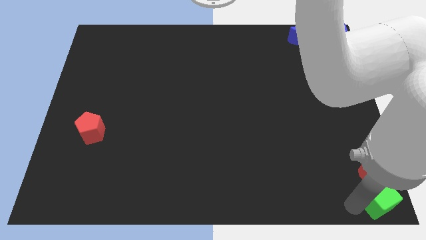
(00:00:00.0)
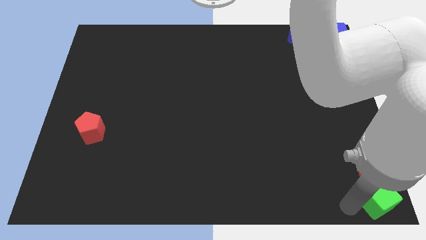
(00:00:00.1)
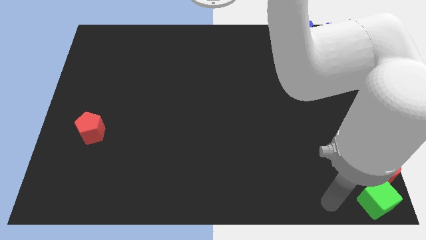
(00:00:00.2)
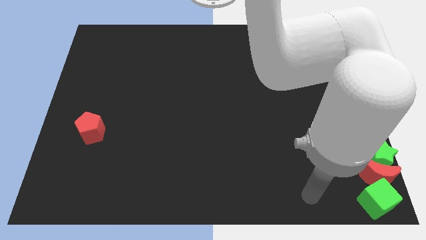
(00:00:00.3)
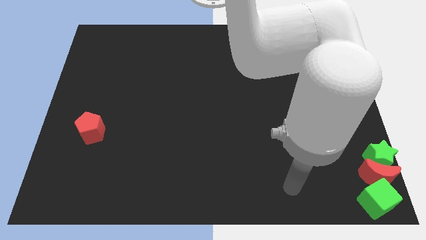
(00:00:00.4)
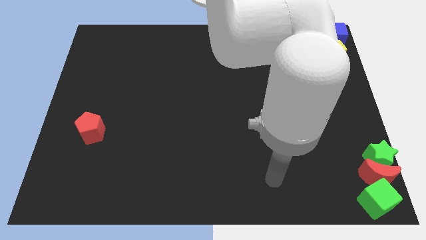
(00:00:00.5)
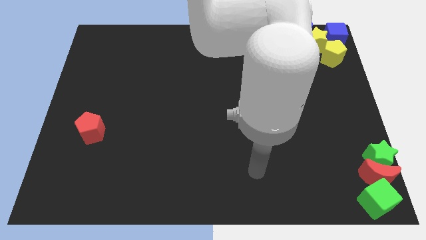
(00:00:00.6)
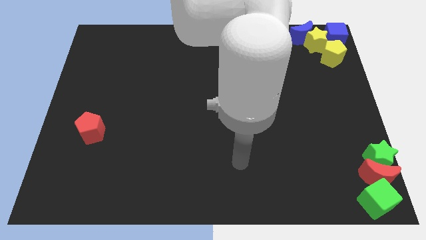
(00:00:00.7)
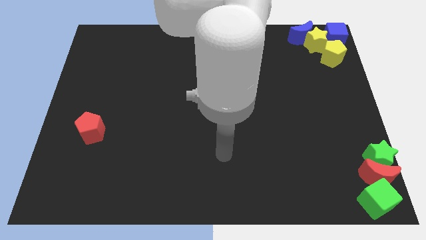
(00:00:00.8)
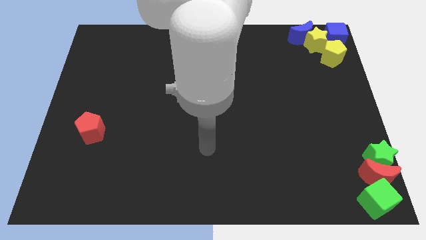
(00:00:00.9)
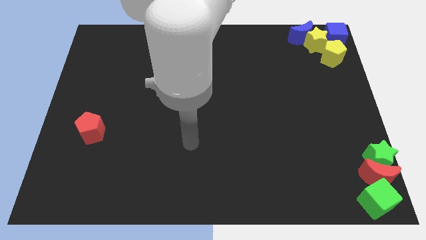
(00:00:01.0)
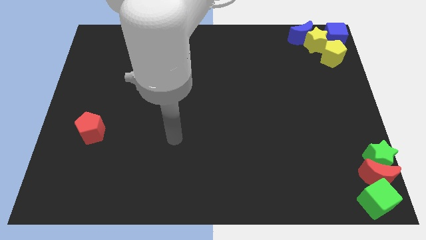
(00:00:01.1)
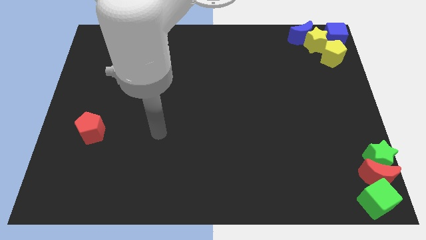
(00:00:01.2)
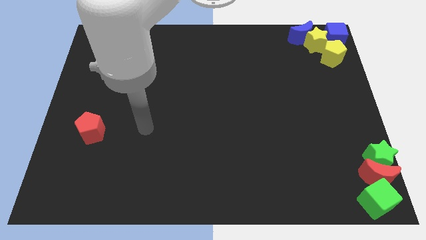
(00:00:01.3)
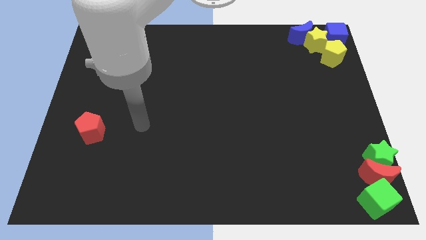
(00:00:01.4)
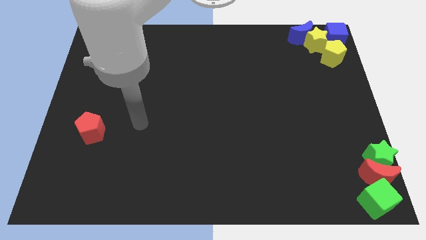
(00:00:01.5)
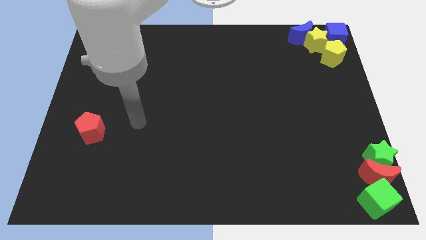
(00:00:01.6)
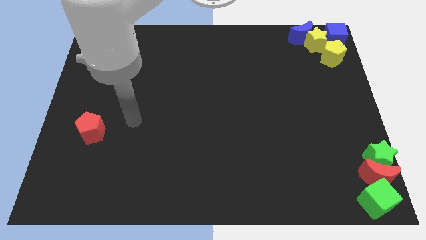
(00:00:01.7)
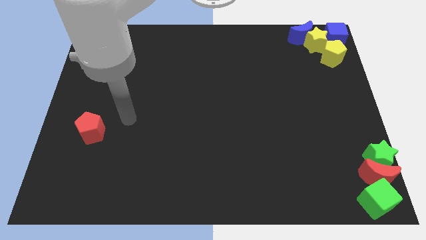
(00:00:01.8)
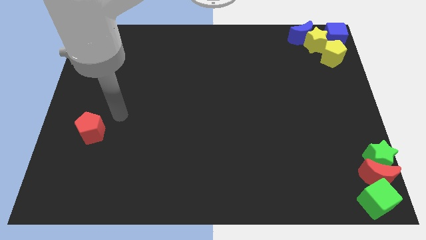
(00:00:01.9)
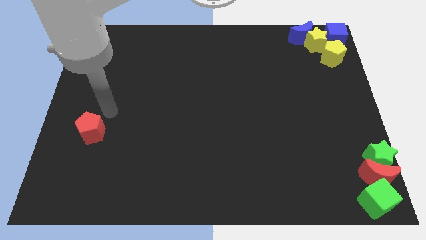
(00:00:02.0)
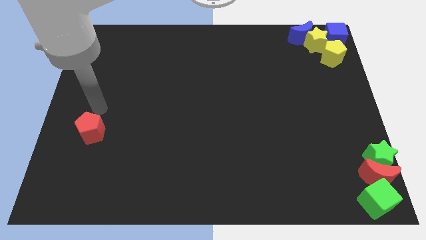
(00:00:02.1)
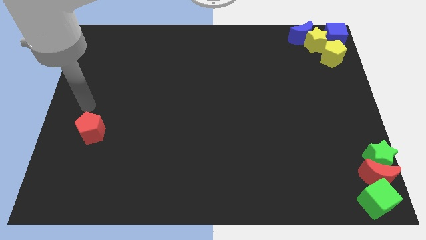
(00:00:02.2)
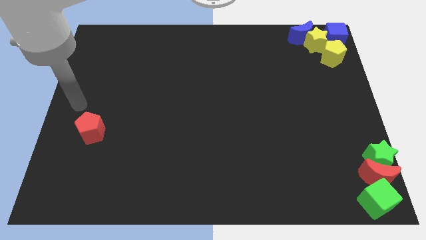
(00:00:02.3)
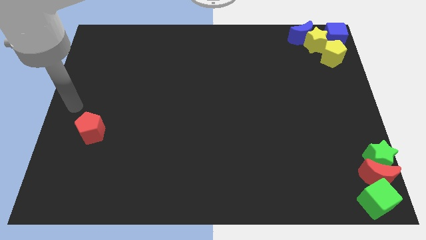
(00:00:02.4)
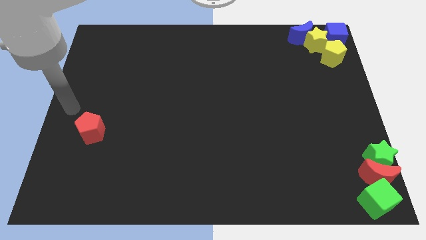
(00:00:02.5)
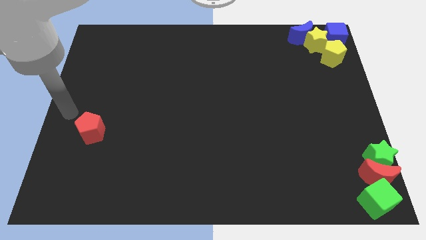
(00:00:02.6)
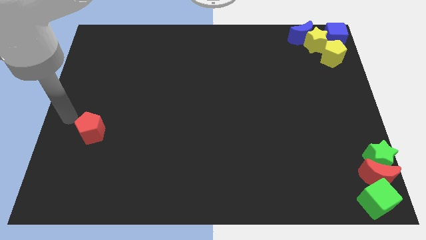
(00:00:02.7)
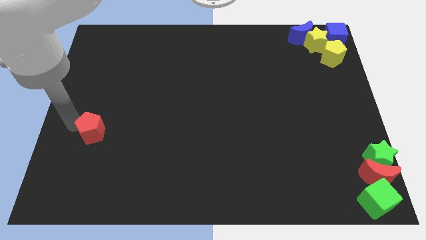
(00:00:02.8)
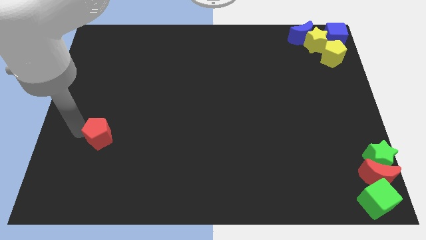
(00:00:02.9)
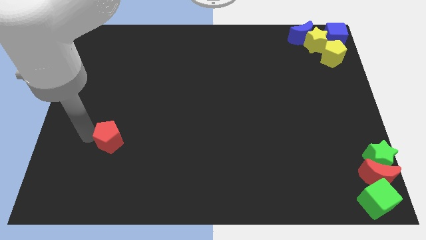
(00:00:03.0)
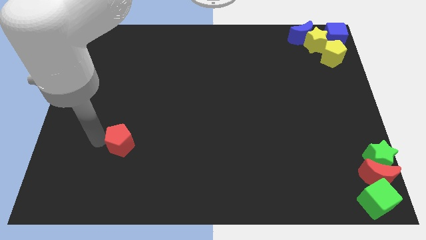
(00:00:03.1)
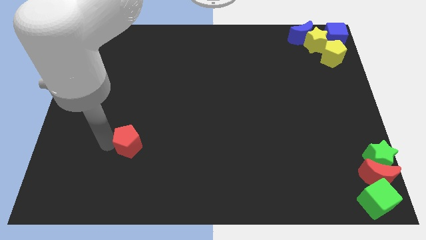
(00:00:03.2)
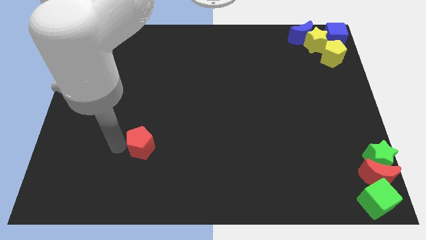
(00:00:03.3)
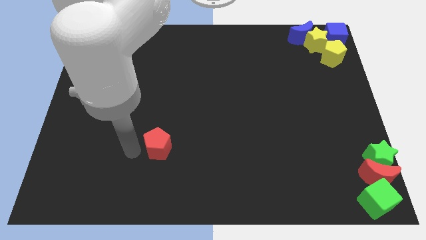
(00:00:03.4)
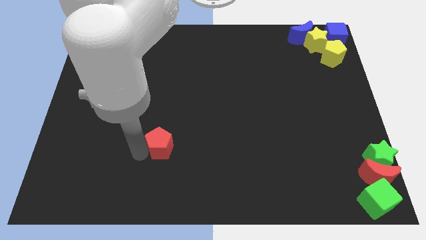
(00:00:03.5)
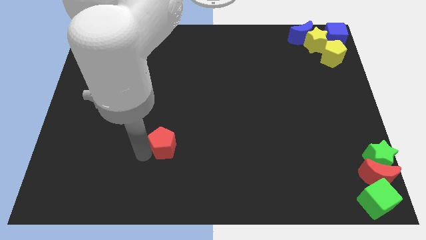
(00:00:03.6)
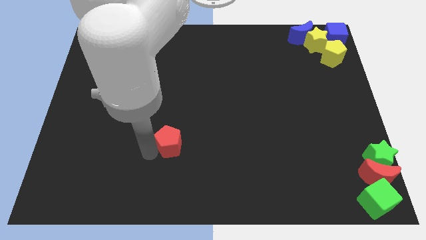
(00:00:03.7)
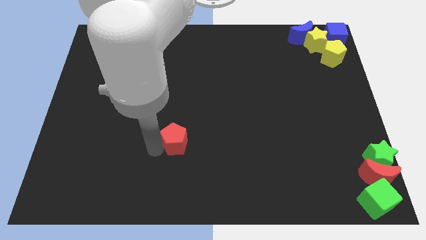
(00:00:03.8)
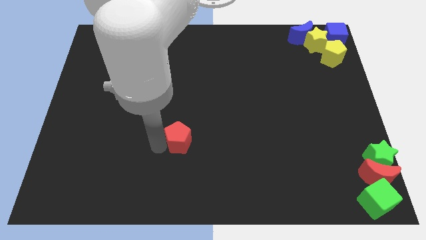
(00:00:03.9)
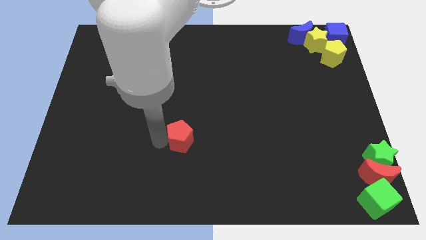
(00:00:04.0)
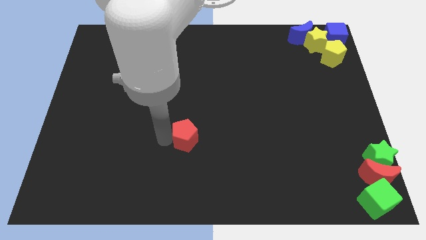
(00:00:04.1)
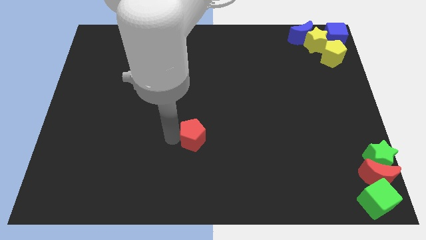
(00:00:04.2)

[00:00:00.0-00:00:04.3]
push the red pentagon to the right

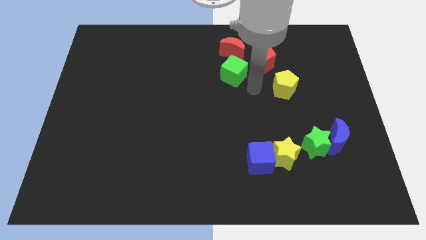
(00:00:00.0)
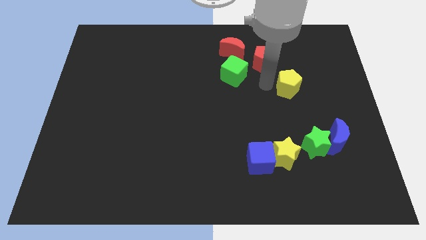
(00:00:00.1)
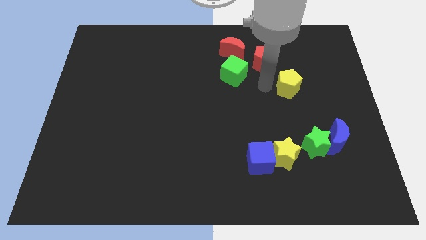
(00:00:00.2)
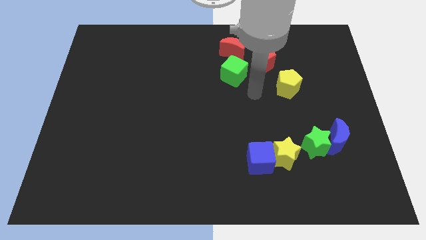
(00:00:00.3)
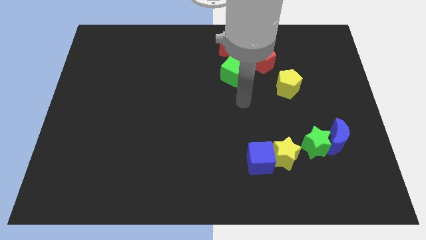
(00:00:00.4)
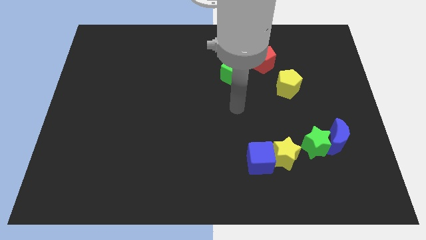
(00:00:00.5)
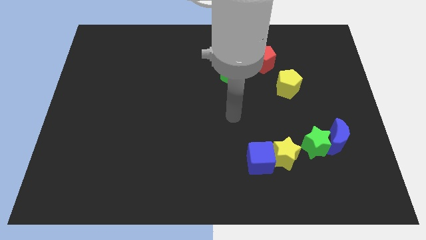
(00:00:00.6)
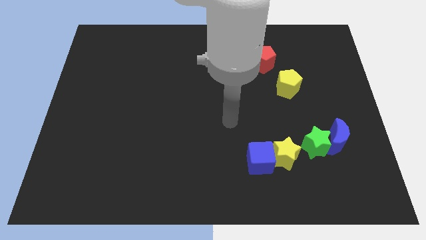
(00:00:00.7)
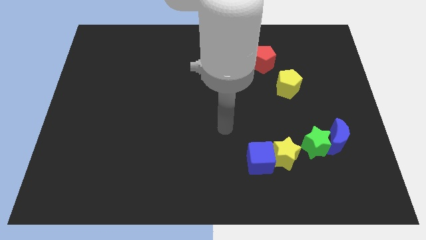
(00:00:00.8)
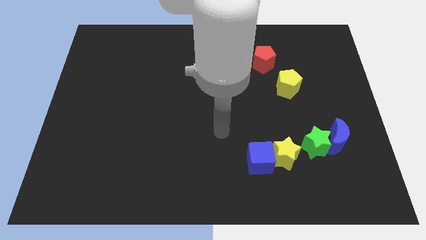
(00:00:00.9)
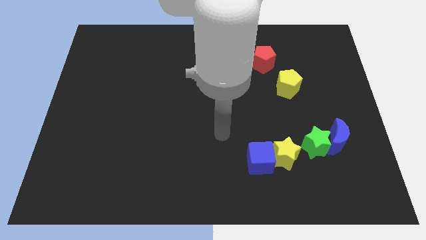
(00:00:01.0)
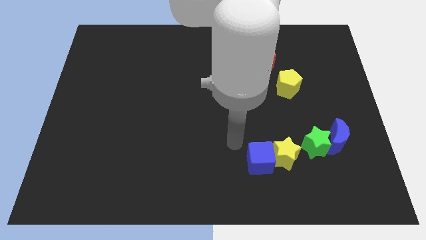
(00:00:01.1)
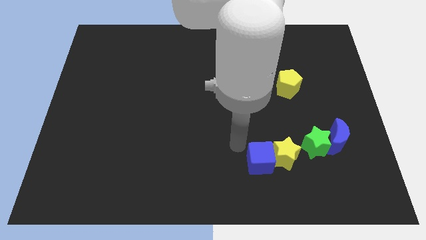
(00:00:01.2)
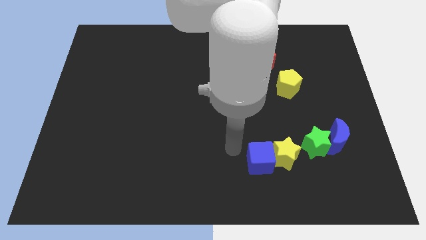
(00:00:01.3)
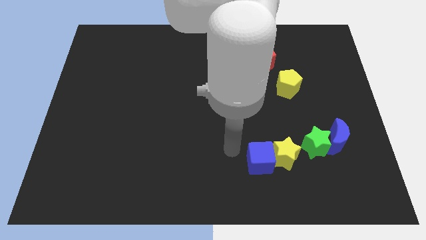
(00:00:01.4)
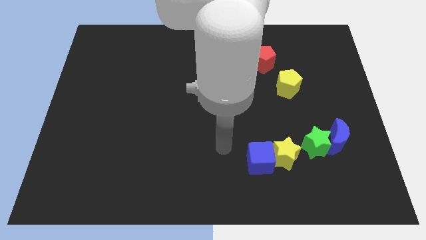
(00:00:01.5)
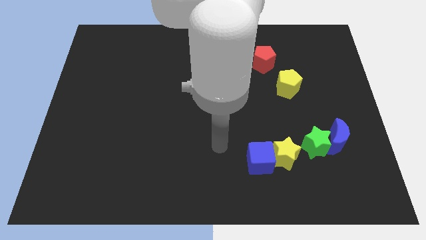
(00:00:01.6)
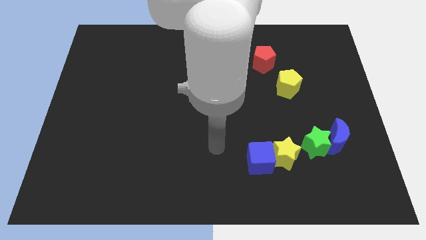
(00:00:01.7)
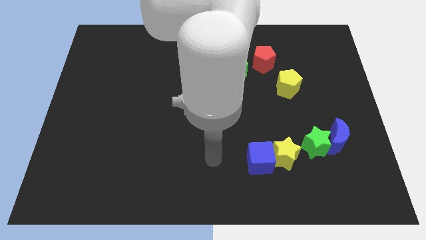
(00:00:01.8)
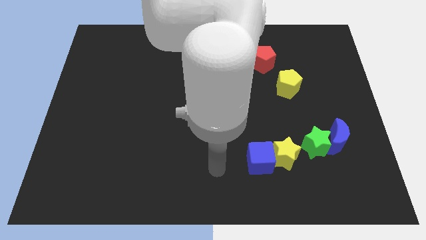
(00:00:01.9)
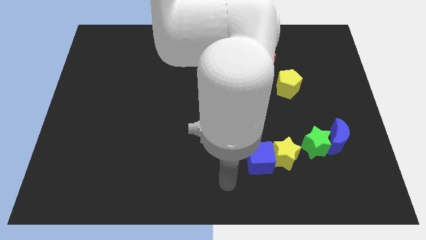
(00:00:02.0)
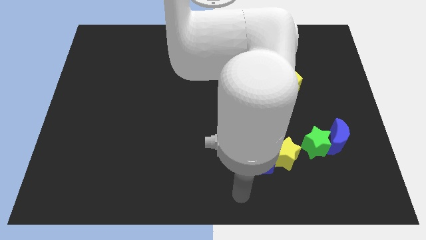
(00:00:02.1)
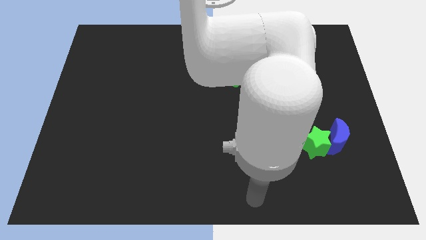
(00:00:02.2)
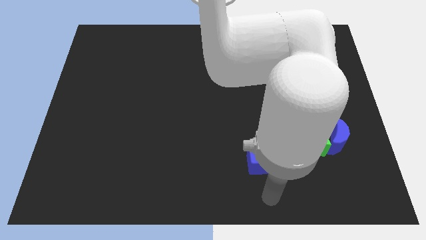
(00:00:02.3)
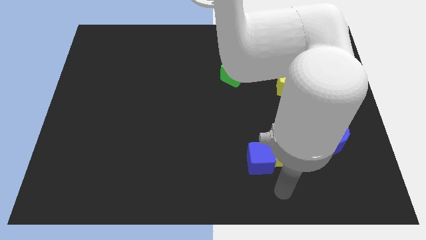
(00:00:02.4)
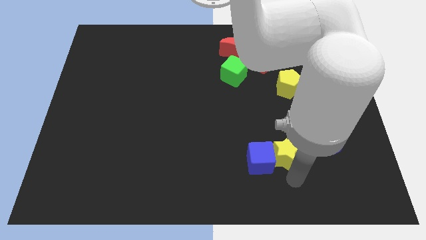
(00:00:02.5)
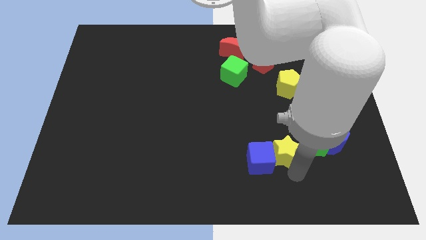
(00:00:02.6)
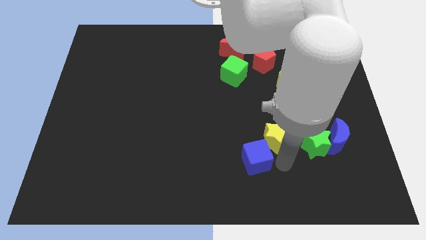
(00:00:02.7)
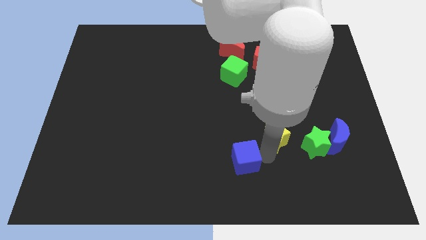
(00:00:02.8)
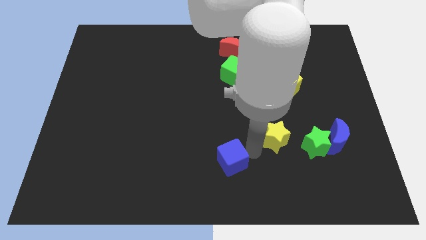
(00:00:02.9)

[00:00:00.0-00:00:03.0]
separate the yellow star and the blue cube

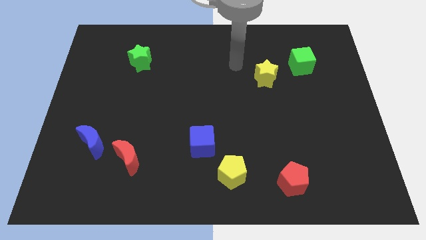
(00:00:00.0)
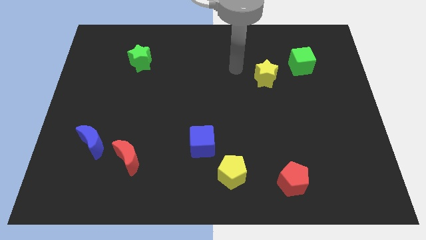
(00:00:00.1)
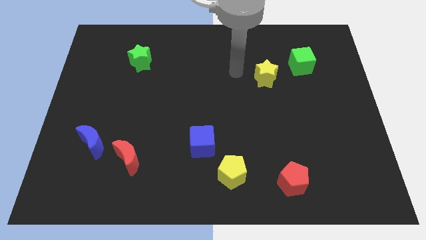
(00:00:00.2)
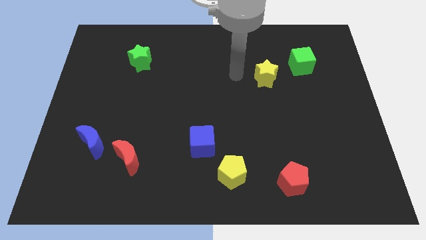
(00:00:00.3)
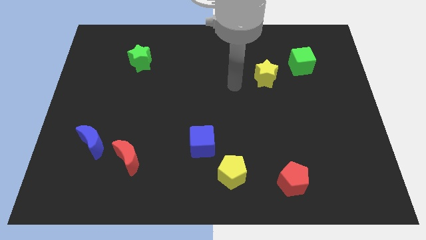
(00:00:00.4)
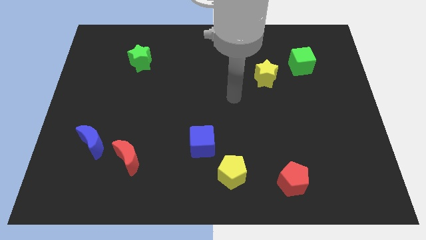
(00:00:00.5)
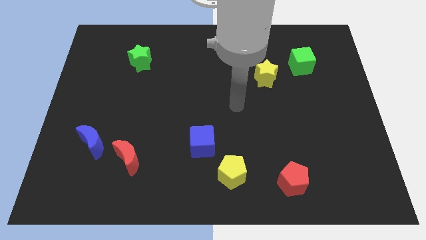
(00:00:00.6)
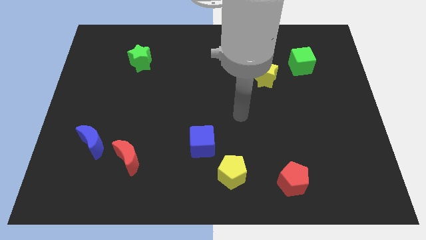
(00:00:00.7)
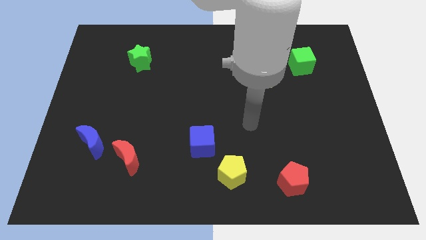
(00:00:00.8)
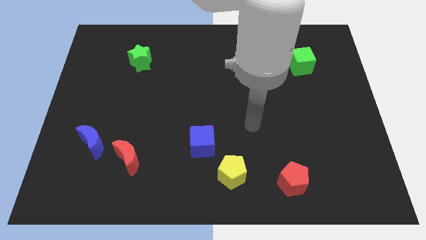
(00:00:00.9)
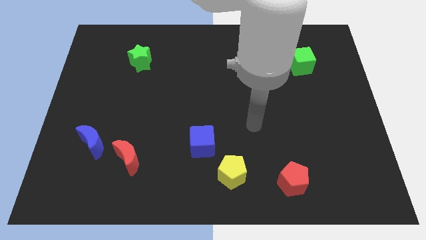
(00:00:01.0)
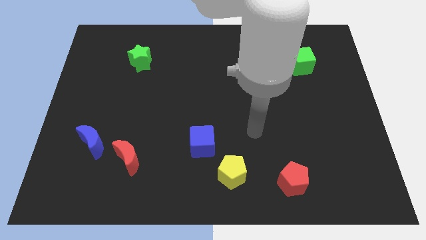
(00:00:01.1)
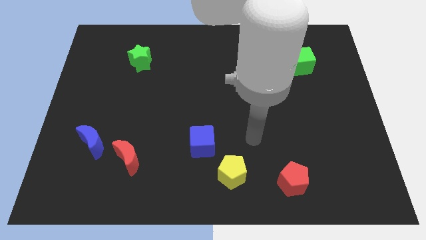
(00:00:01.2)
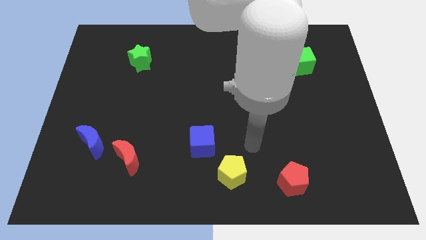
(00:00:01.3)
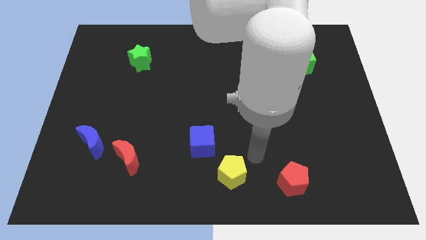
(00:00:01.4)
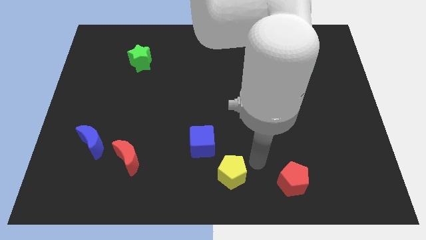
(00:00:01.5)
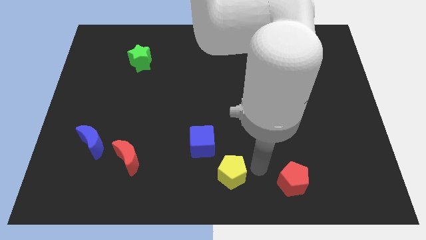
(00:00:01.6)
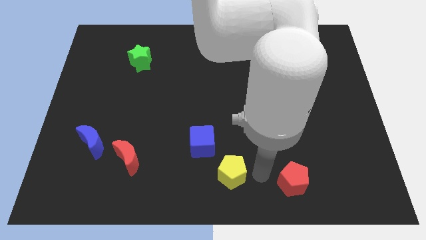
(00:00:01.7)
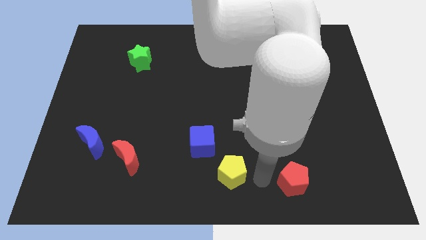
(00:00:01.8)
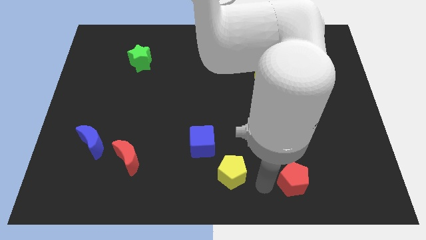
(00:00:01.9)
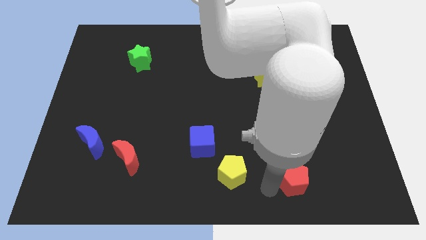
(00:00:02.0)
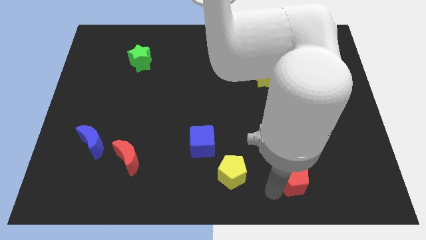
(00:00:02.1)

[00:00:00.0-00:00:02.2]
place your arm left side of red pentagon
